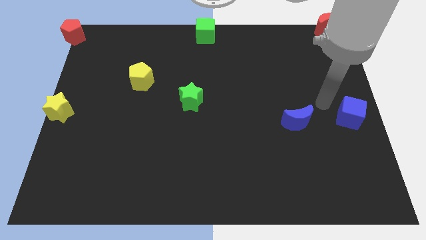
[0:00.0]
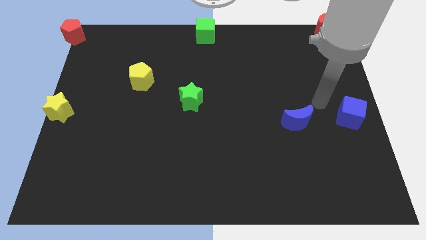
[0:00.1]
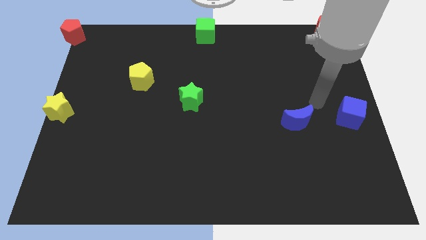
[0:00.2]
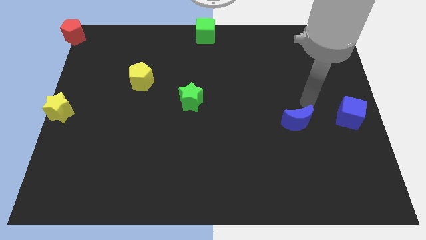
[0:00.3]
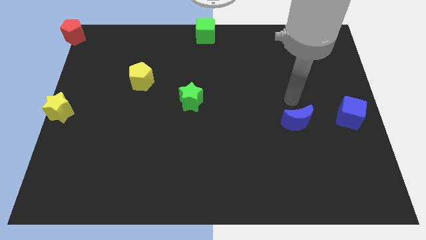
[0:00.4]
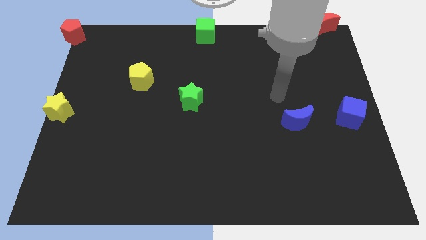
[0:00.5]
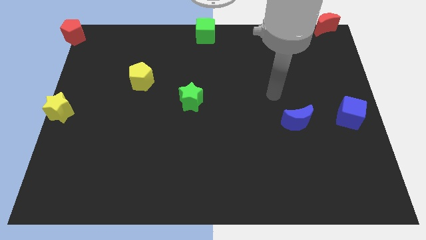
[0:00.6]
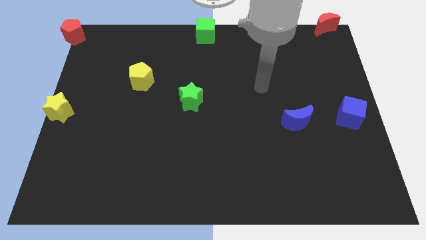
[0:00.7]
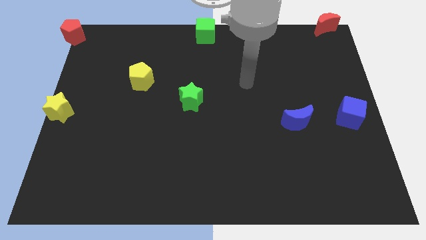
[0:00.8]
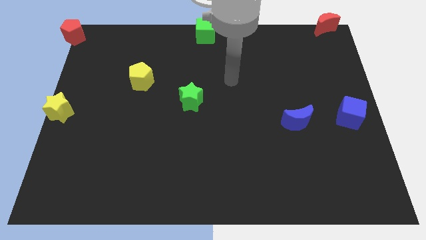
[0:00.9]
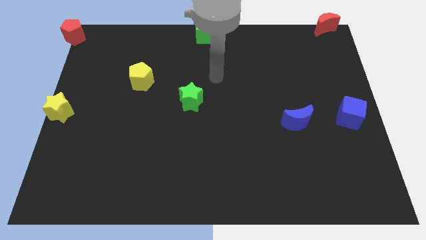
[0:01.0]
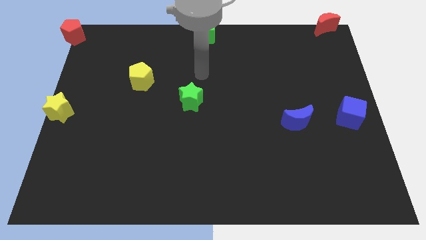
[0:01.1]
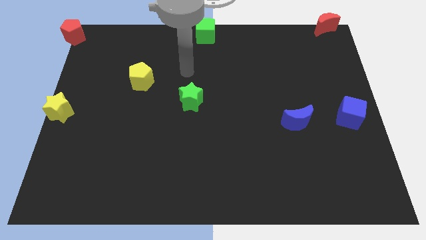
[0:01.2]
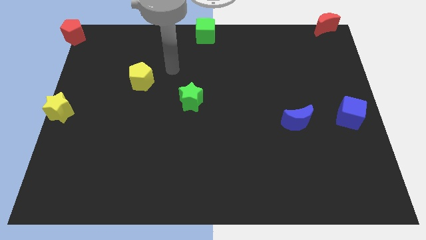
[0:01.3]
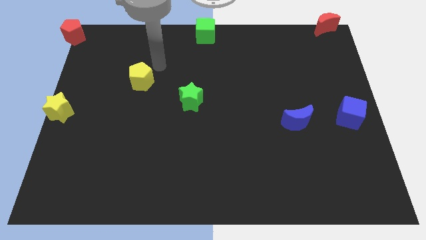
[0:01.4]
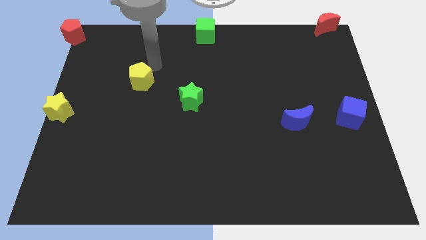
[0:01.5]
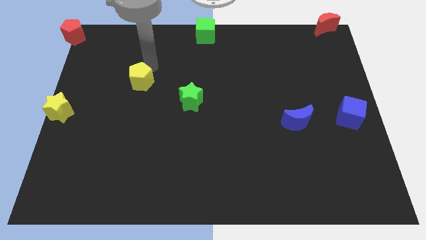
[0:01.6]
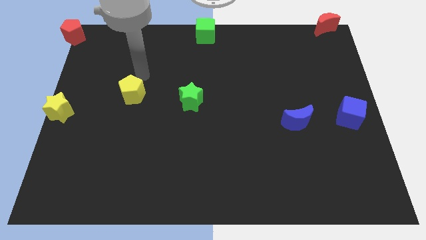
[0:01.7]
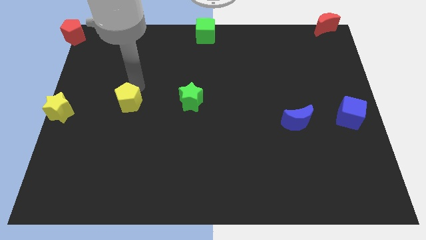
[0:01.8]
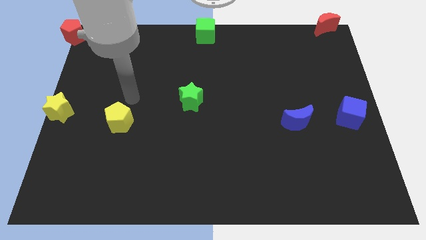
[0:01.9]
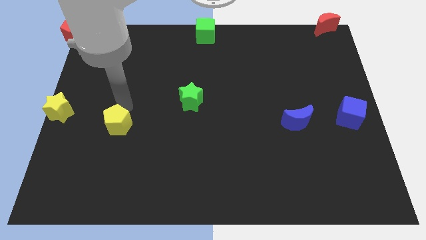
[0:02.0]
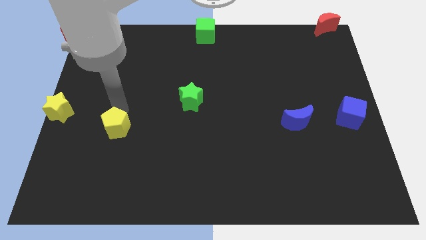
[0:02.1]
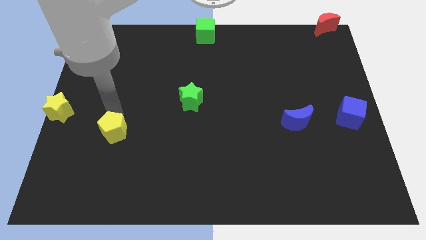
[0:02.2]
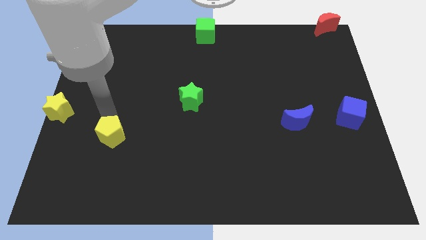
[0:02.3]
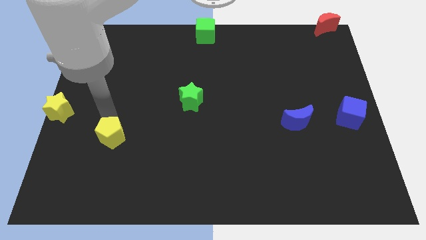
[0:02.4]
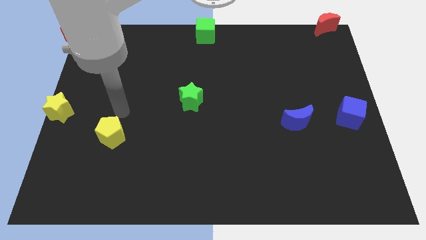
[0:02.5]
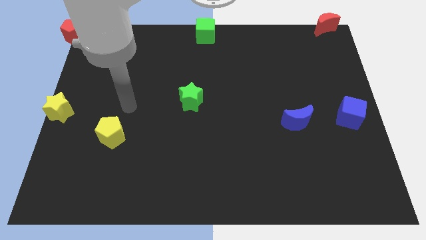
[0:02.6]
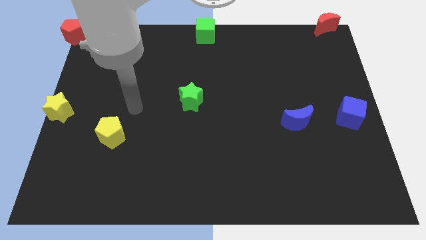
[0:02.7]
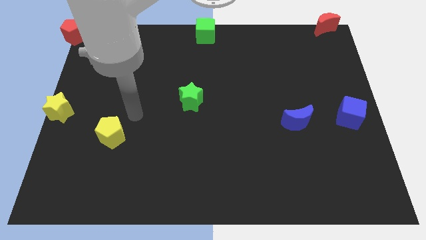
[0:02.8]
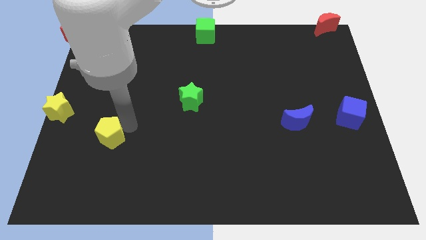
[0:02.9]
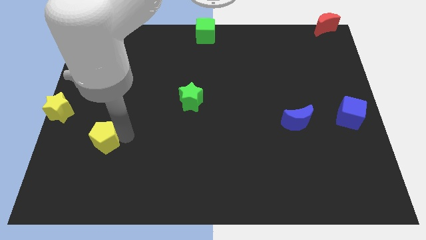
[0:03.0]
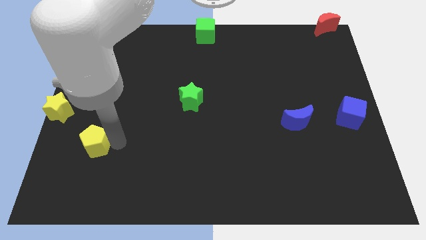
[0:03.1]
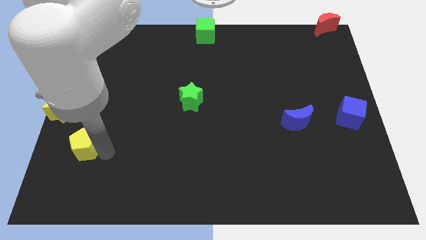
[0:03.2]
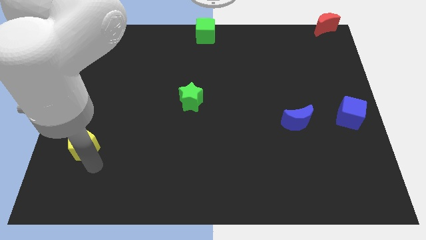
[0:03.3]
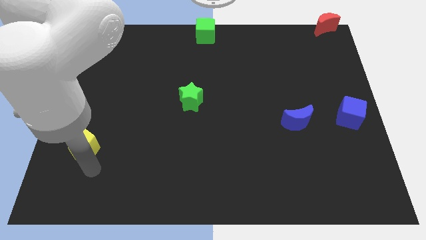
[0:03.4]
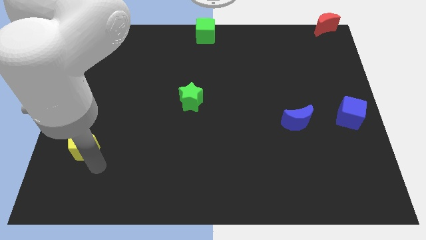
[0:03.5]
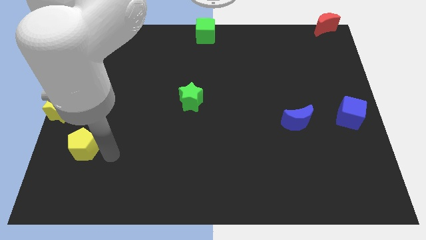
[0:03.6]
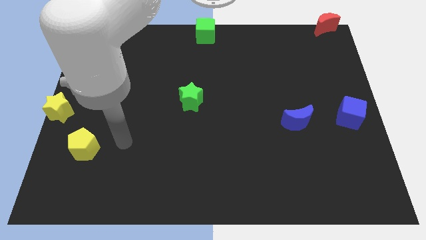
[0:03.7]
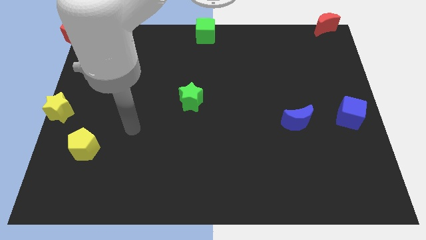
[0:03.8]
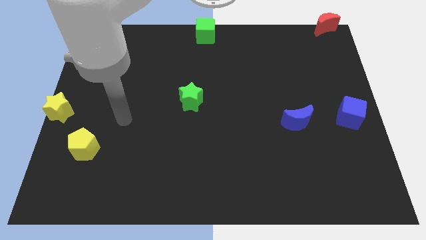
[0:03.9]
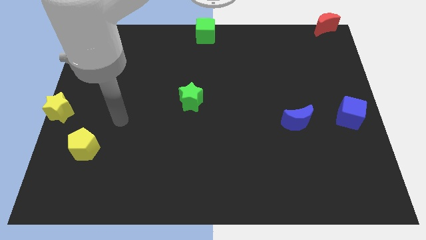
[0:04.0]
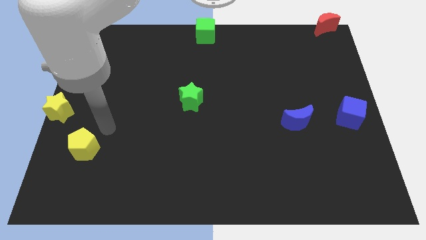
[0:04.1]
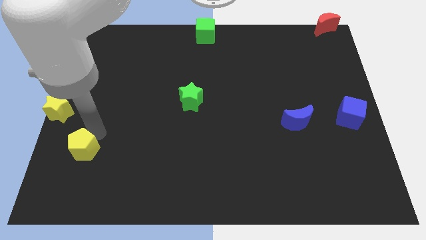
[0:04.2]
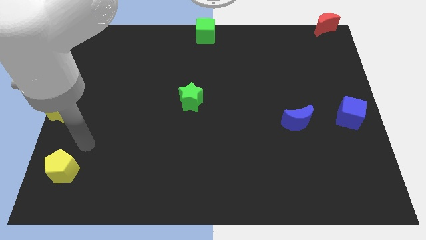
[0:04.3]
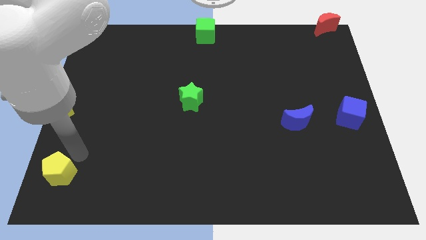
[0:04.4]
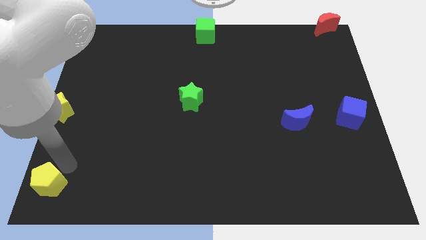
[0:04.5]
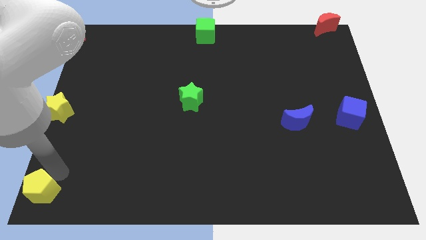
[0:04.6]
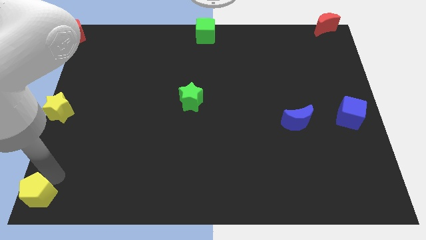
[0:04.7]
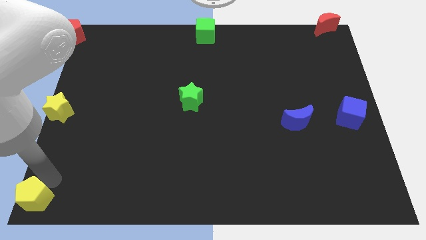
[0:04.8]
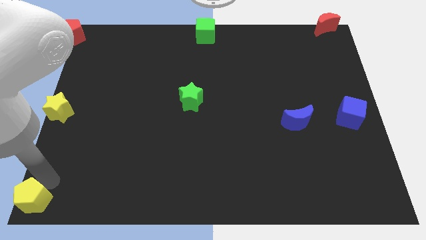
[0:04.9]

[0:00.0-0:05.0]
push the yellow pentagon to the bottom left corner of the board

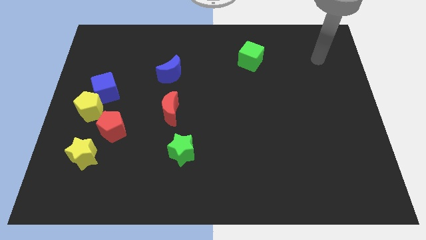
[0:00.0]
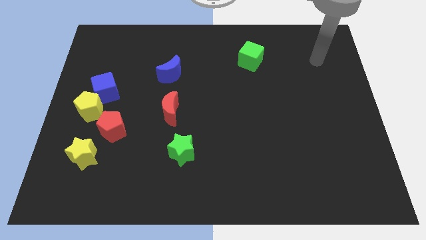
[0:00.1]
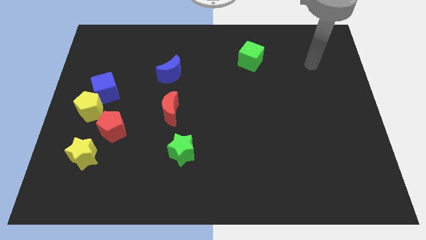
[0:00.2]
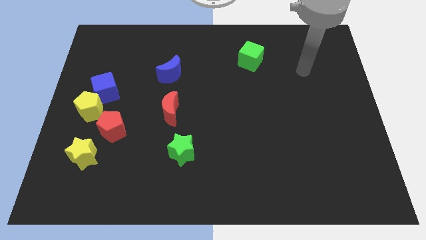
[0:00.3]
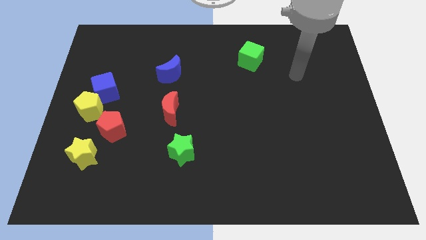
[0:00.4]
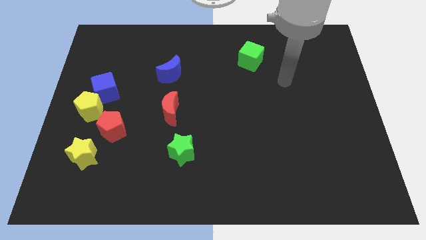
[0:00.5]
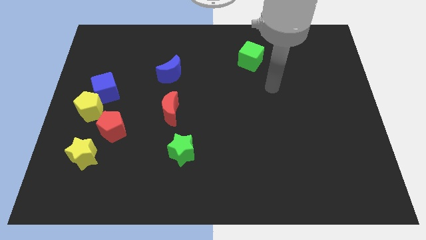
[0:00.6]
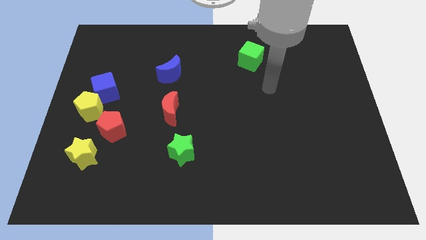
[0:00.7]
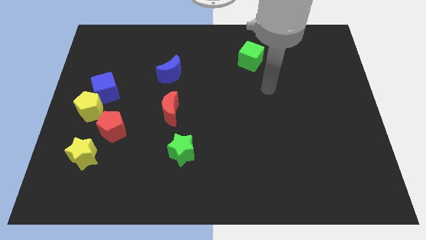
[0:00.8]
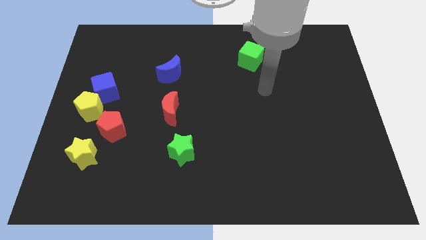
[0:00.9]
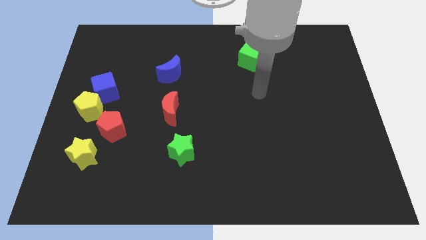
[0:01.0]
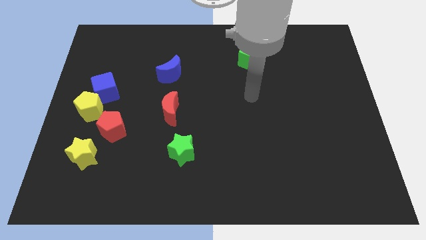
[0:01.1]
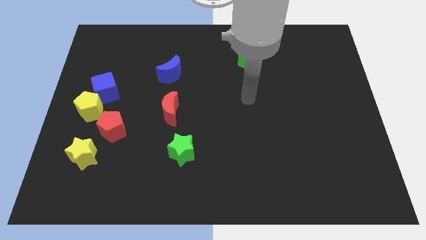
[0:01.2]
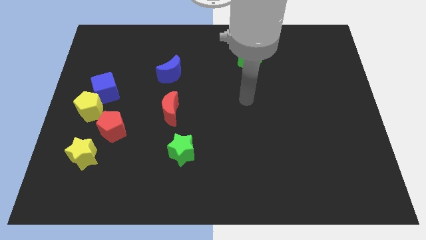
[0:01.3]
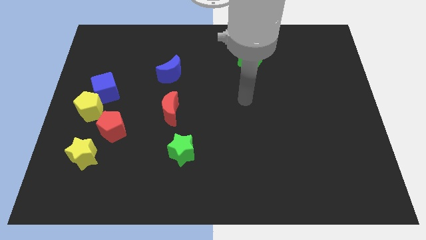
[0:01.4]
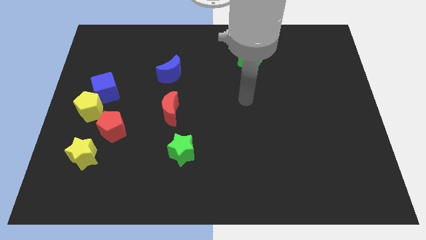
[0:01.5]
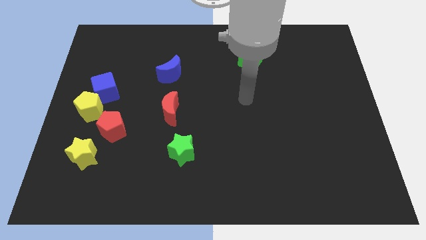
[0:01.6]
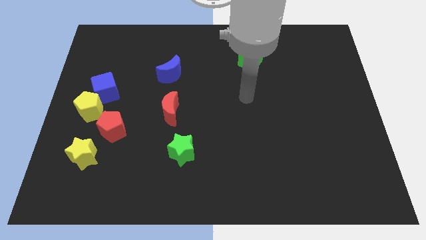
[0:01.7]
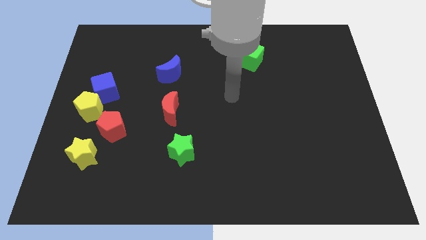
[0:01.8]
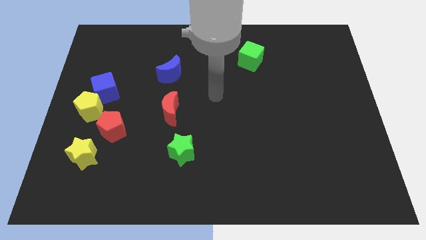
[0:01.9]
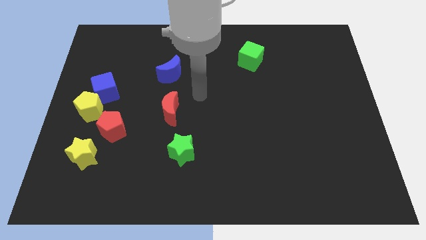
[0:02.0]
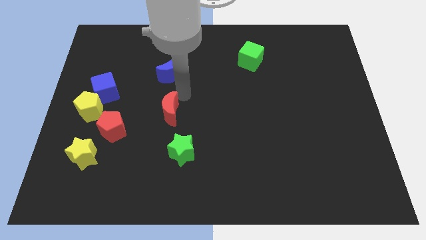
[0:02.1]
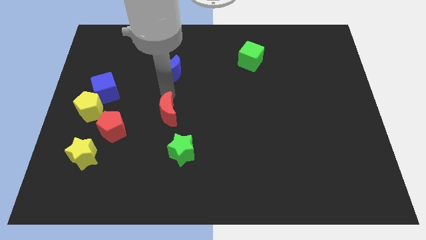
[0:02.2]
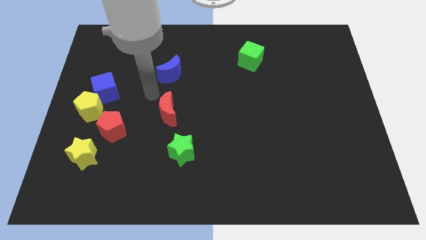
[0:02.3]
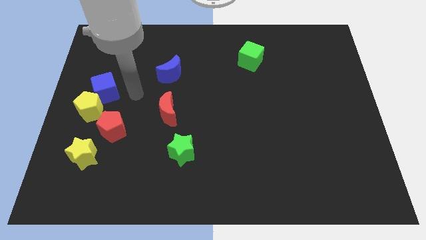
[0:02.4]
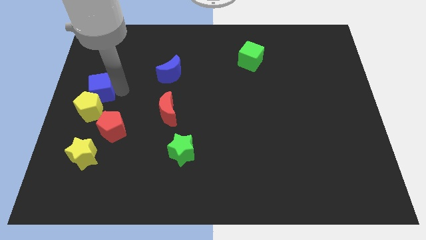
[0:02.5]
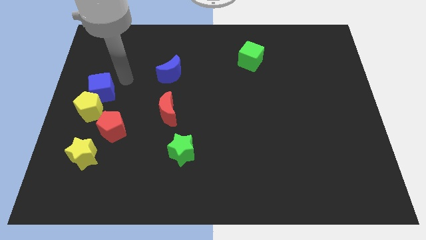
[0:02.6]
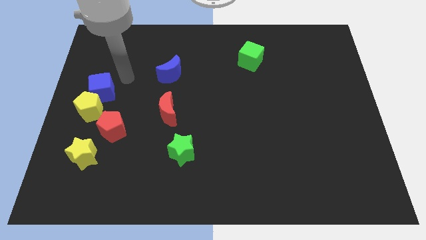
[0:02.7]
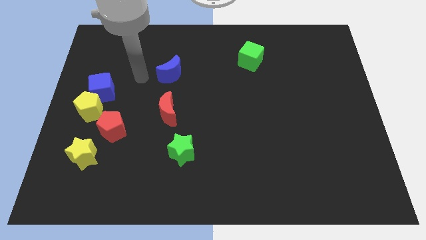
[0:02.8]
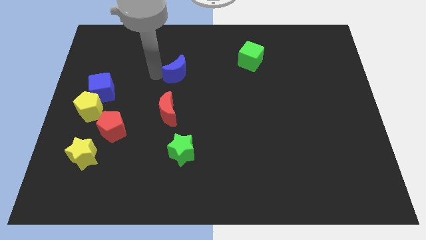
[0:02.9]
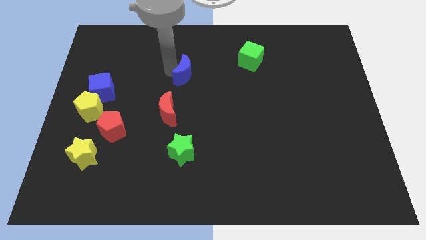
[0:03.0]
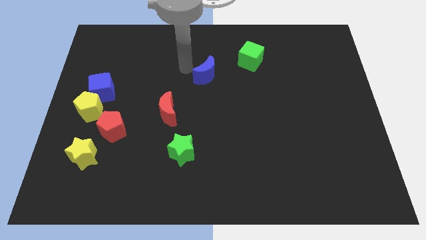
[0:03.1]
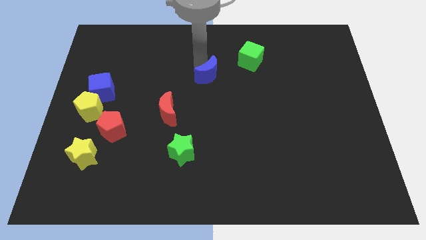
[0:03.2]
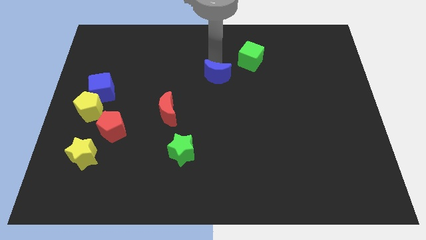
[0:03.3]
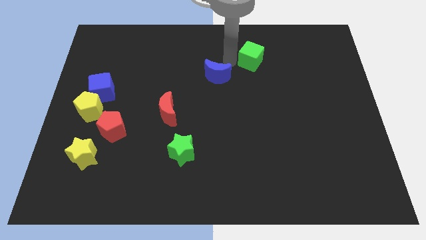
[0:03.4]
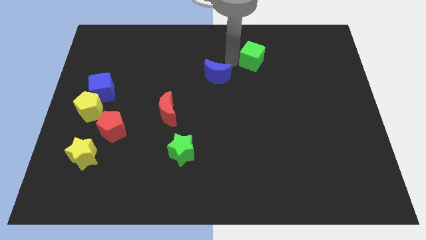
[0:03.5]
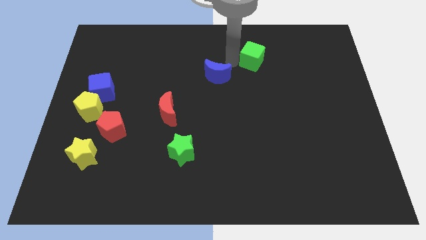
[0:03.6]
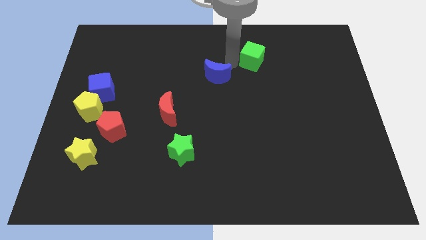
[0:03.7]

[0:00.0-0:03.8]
push the blue moon to the right side of the board

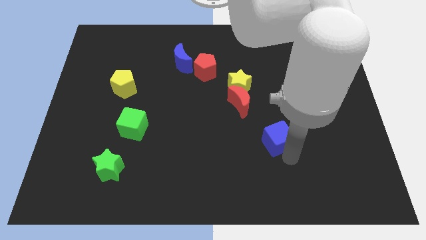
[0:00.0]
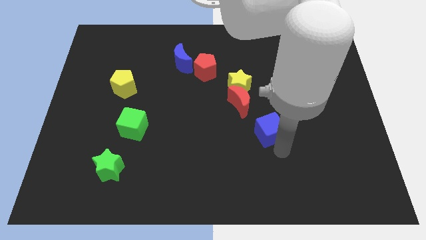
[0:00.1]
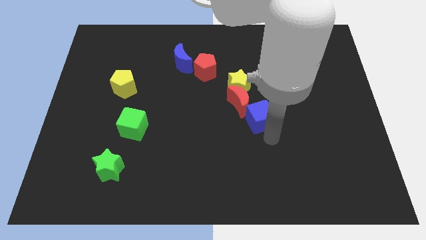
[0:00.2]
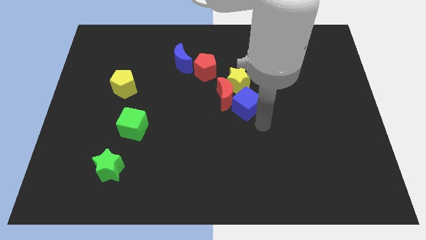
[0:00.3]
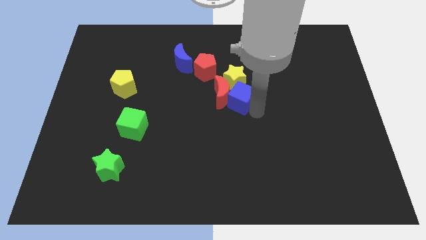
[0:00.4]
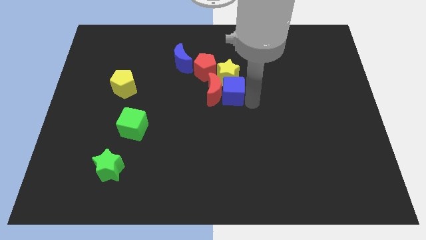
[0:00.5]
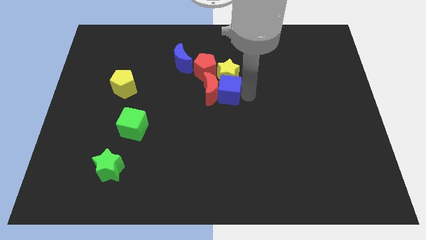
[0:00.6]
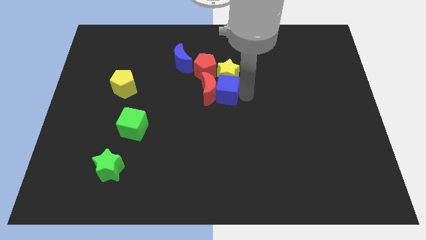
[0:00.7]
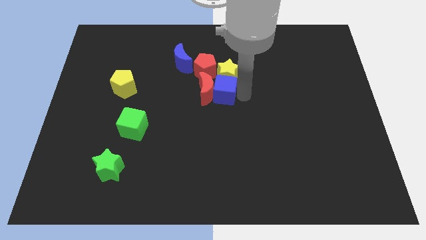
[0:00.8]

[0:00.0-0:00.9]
move the blue cube to the group of blocks
